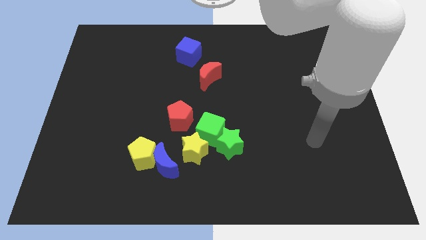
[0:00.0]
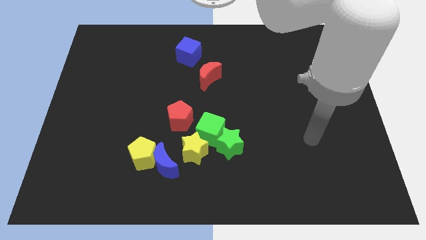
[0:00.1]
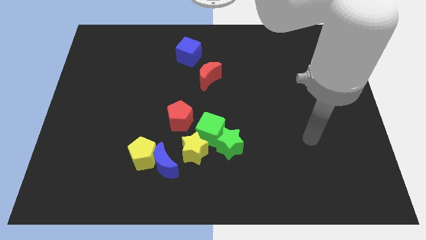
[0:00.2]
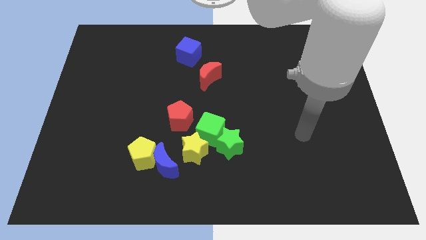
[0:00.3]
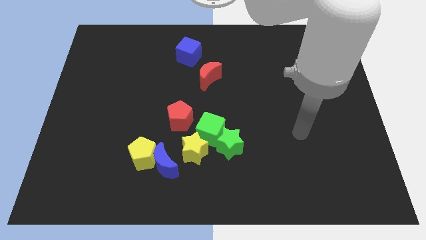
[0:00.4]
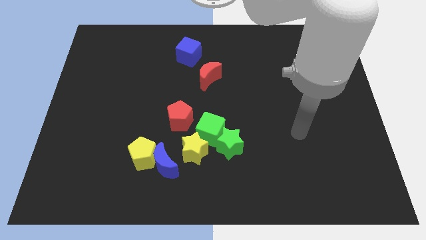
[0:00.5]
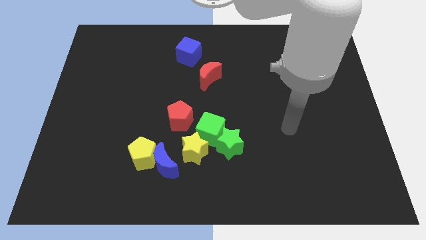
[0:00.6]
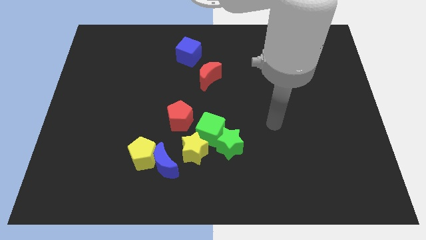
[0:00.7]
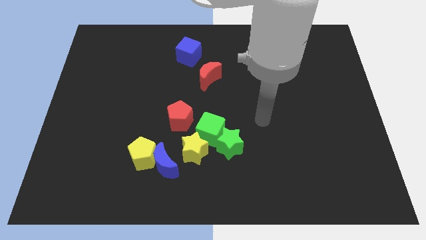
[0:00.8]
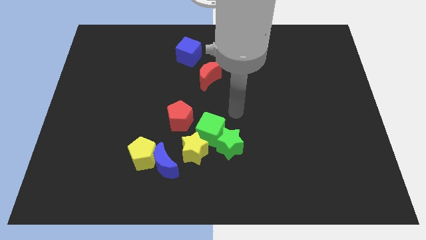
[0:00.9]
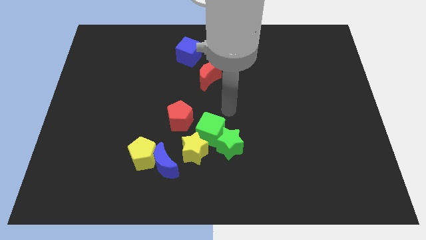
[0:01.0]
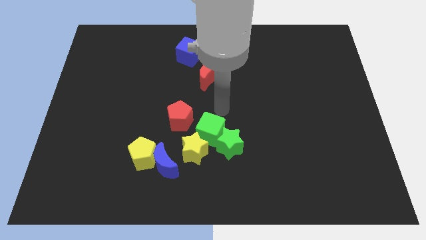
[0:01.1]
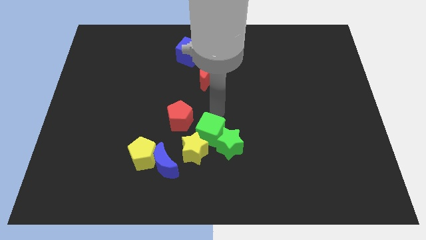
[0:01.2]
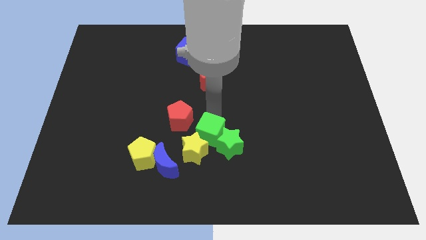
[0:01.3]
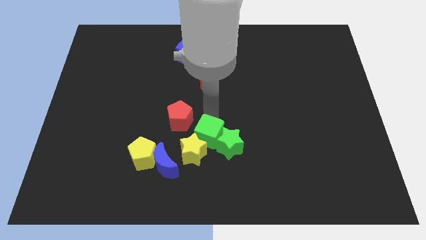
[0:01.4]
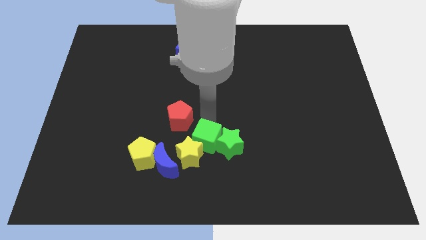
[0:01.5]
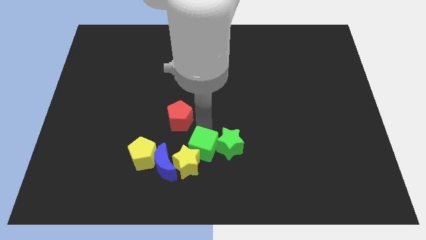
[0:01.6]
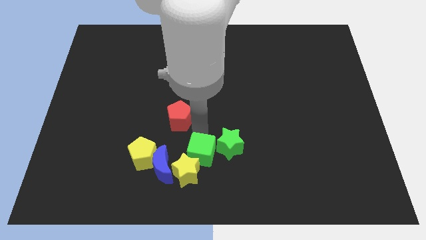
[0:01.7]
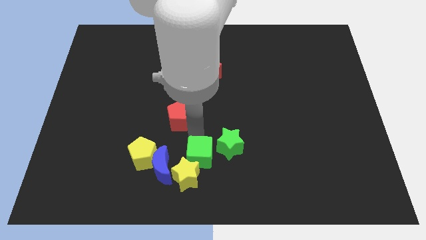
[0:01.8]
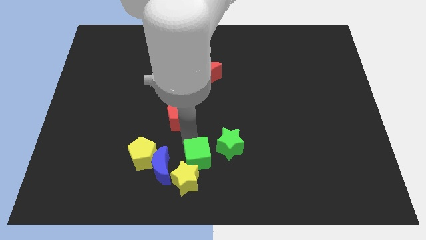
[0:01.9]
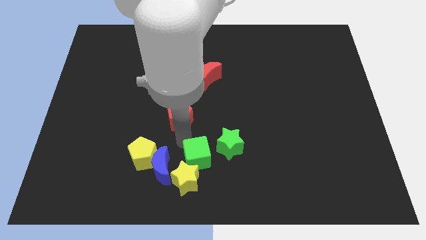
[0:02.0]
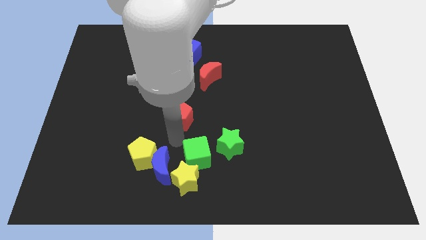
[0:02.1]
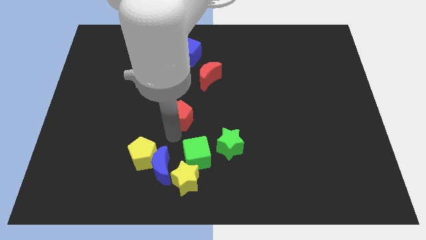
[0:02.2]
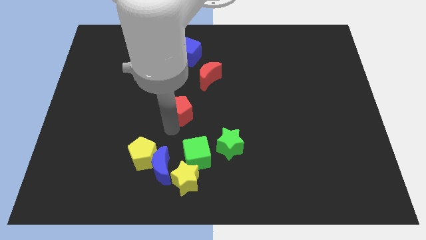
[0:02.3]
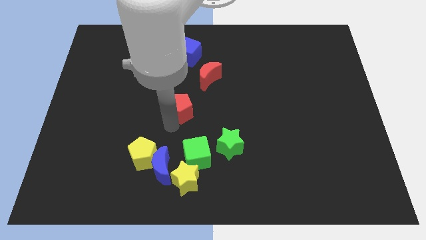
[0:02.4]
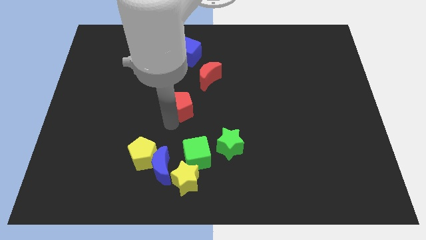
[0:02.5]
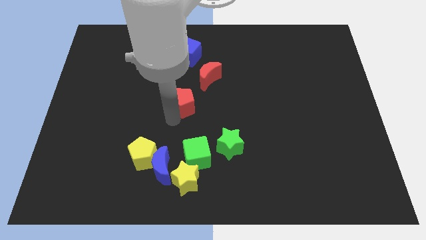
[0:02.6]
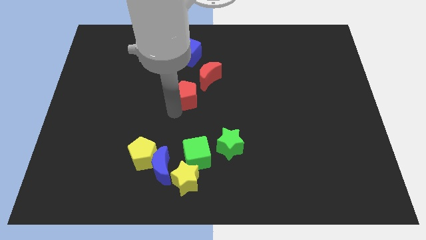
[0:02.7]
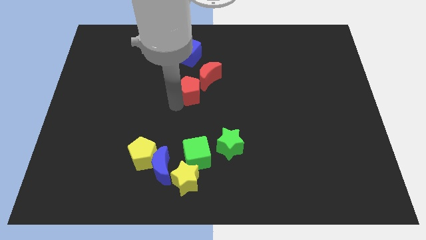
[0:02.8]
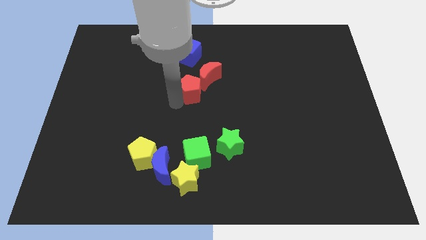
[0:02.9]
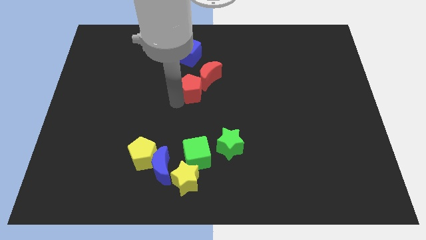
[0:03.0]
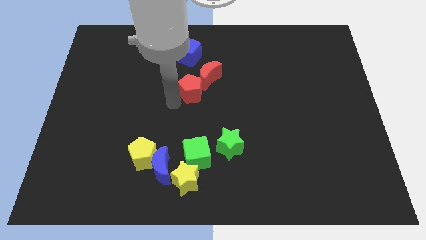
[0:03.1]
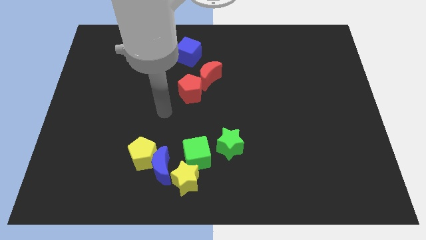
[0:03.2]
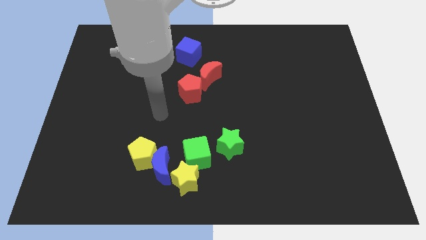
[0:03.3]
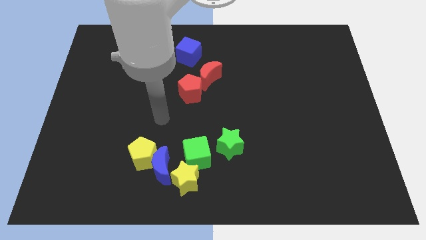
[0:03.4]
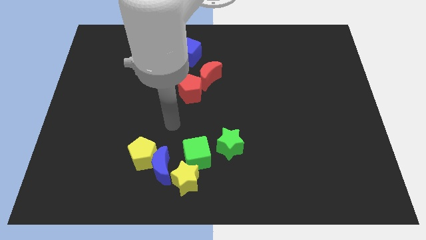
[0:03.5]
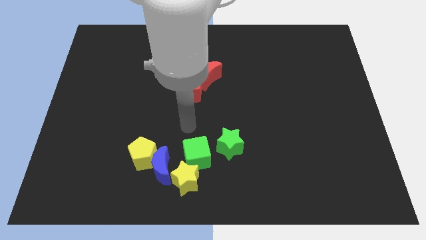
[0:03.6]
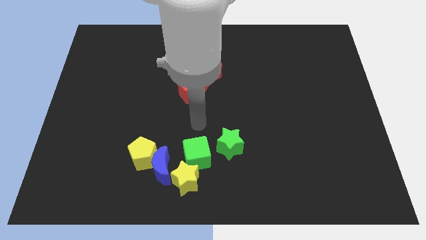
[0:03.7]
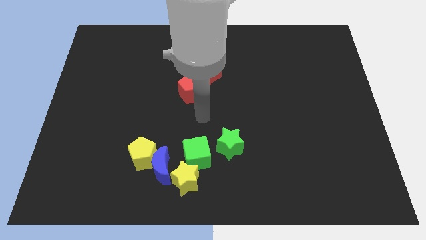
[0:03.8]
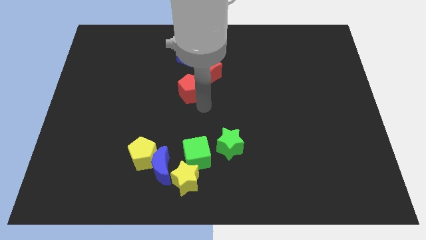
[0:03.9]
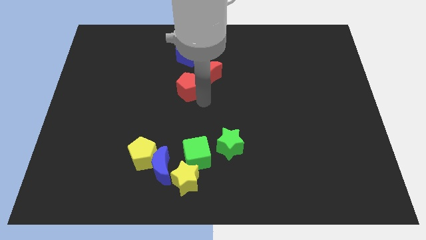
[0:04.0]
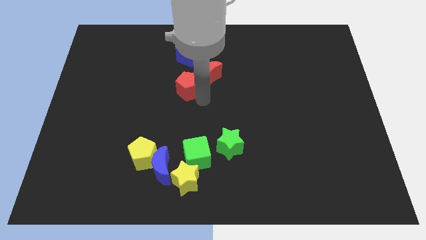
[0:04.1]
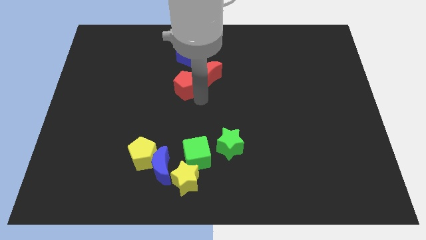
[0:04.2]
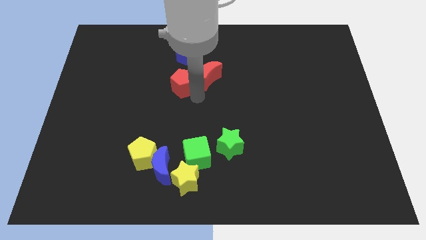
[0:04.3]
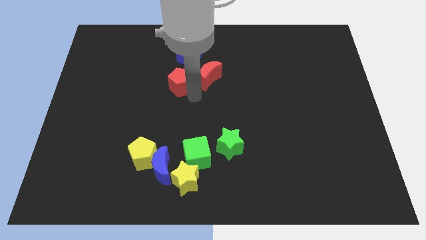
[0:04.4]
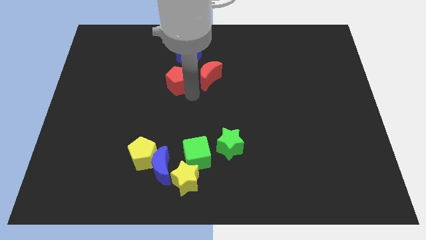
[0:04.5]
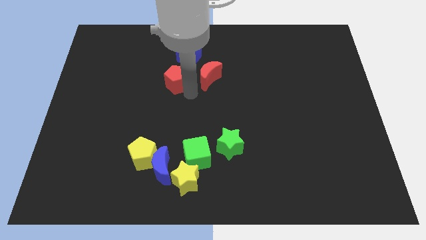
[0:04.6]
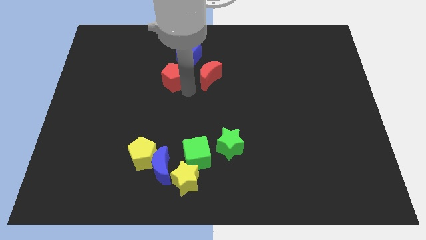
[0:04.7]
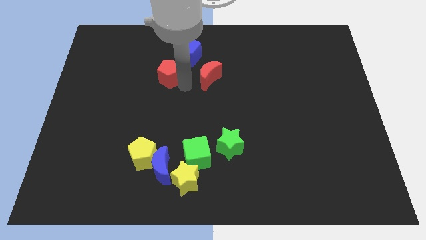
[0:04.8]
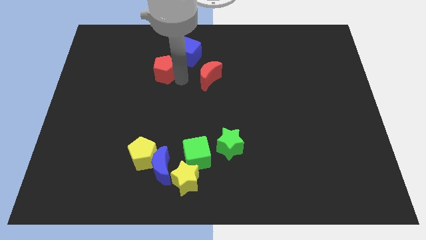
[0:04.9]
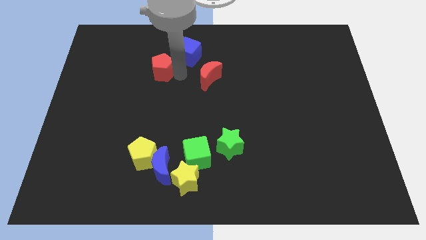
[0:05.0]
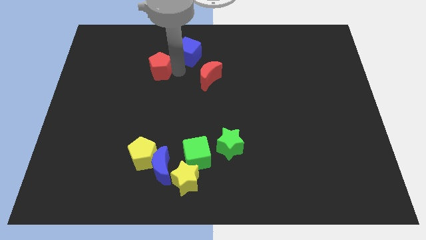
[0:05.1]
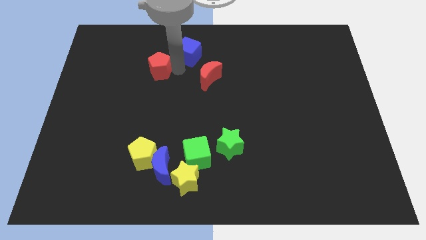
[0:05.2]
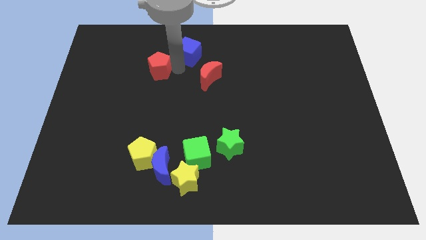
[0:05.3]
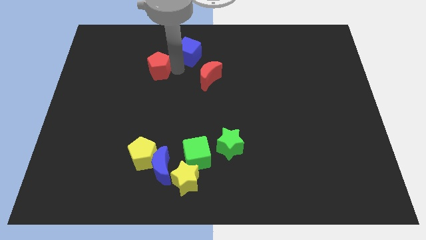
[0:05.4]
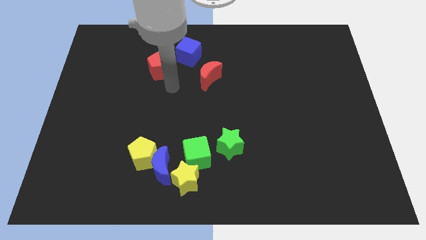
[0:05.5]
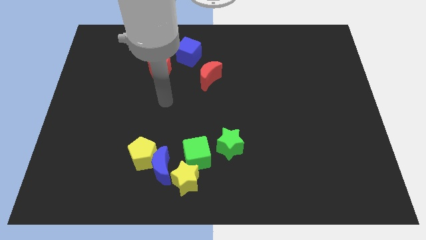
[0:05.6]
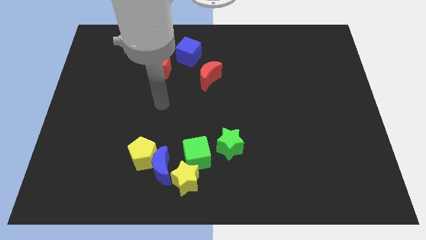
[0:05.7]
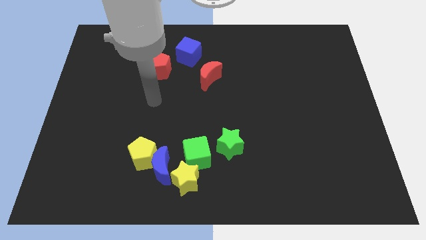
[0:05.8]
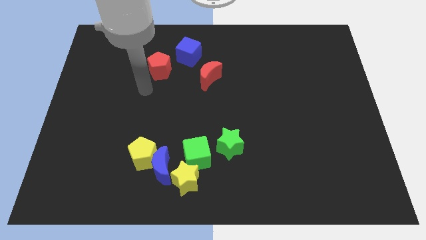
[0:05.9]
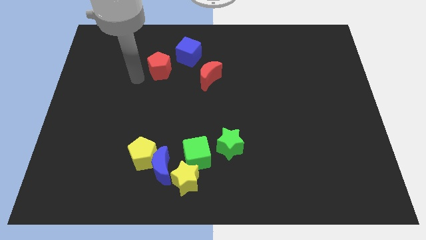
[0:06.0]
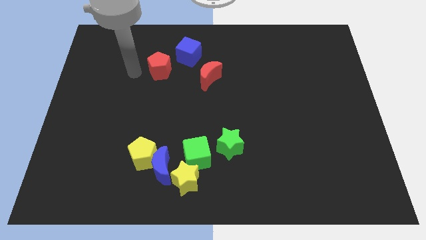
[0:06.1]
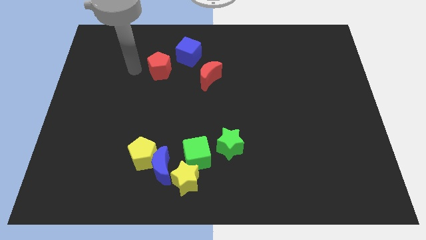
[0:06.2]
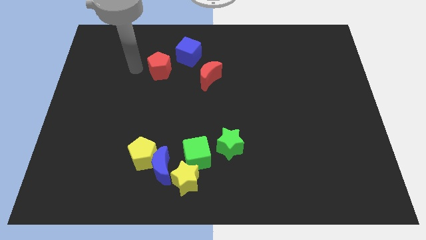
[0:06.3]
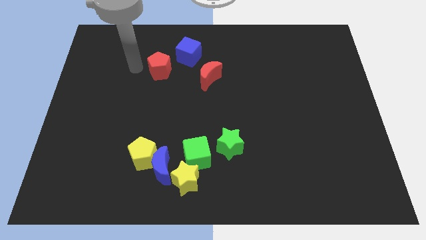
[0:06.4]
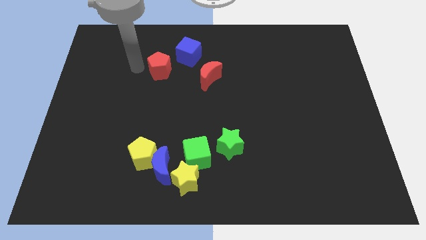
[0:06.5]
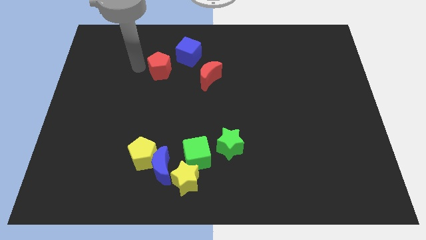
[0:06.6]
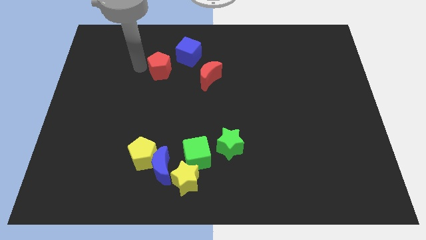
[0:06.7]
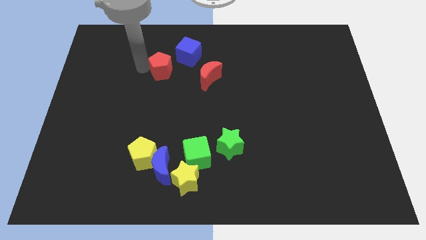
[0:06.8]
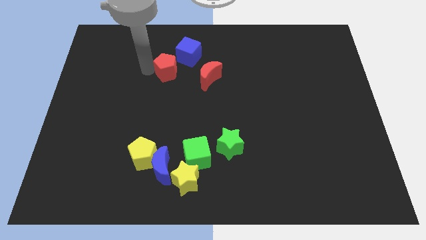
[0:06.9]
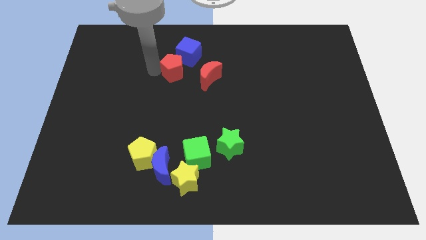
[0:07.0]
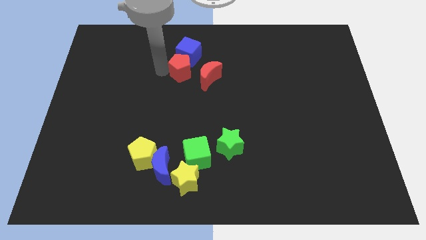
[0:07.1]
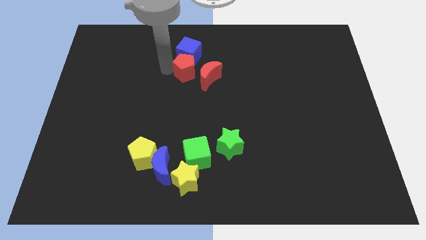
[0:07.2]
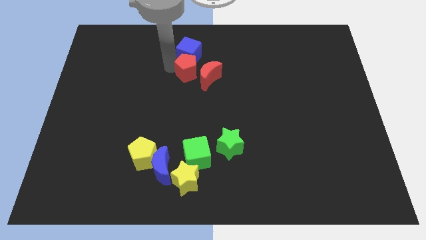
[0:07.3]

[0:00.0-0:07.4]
push the red pentagon to the blue cube

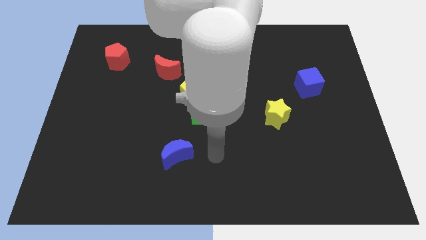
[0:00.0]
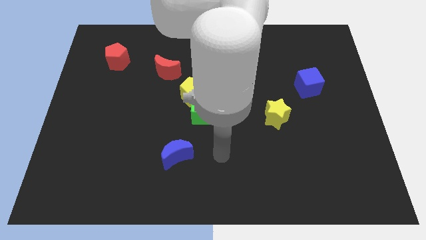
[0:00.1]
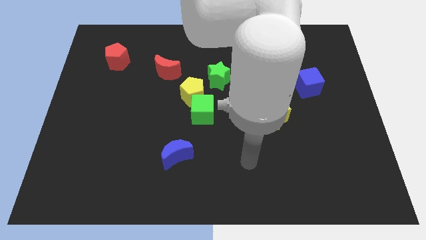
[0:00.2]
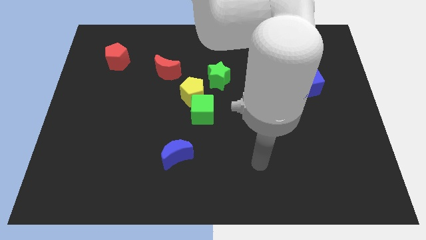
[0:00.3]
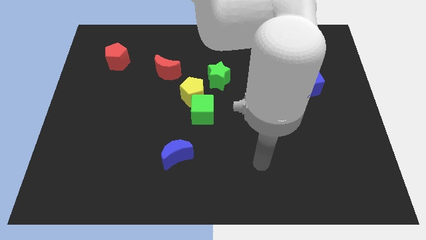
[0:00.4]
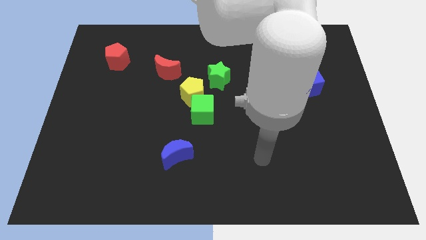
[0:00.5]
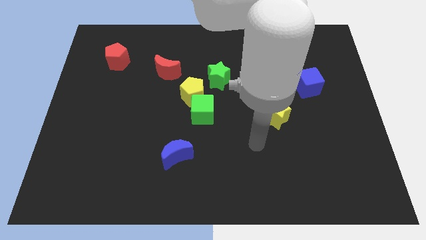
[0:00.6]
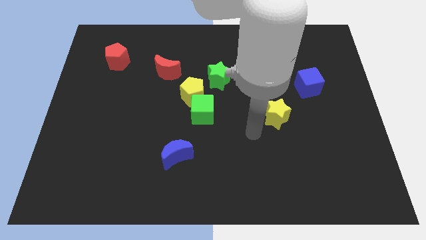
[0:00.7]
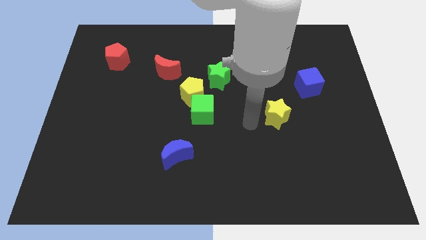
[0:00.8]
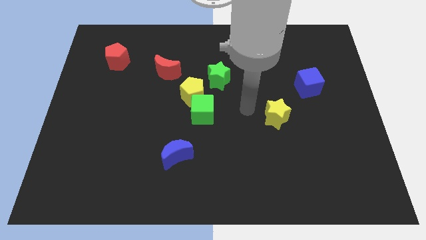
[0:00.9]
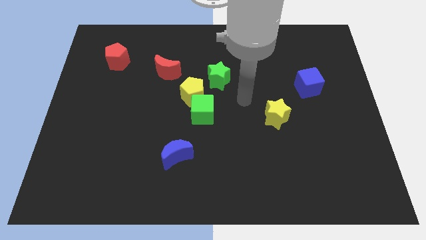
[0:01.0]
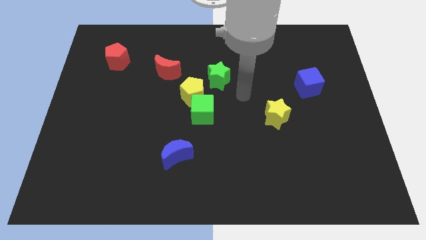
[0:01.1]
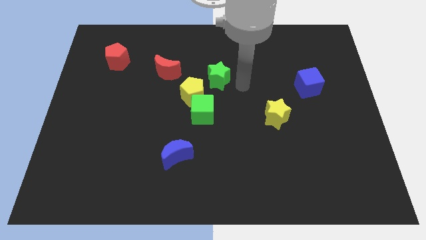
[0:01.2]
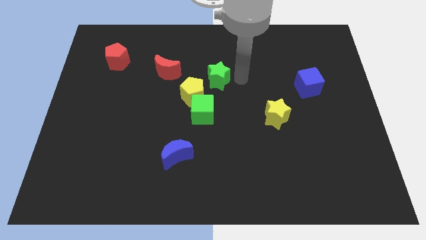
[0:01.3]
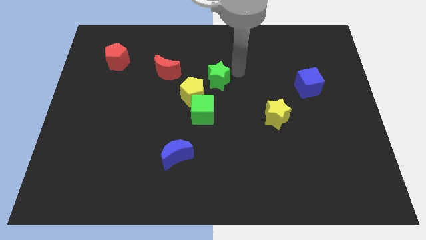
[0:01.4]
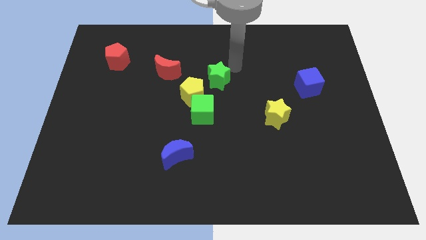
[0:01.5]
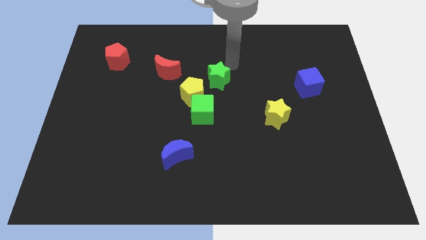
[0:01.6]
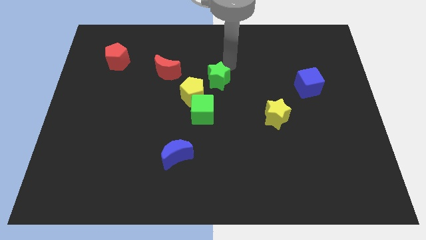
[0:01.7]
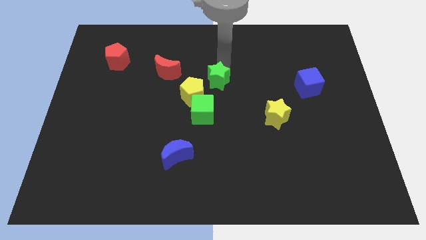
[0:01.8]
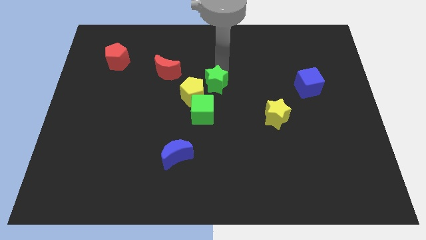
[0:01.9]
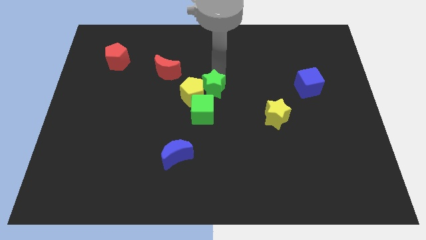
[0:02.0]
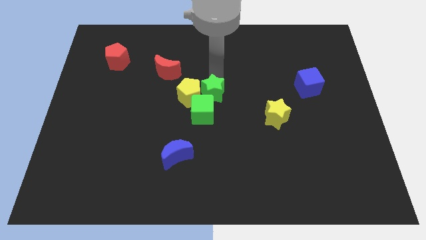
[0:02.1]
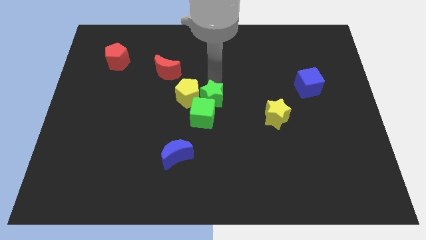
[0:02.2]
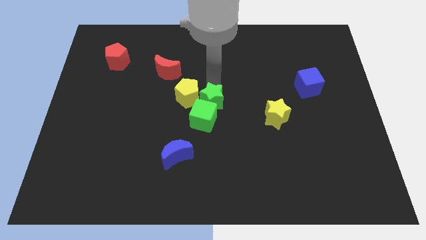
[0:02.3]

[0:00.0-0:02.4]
put the green star next to the green cube
